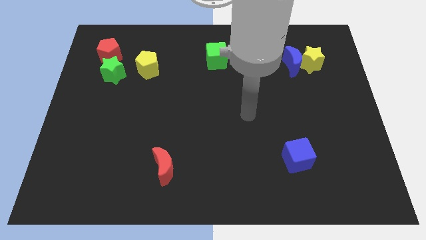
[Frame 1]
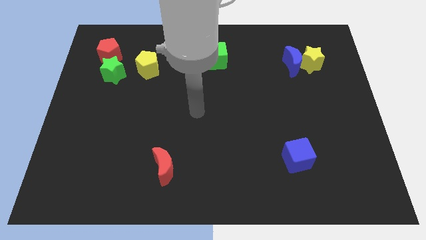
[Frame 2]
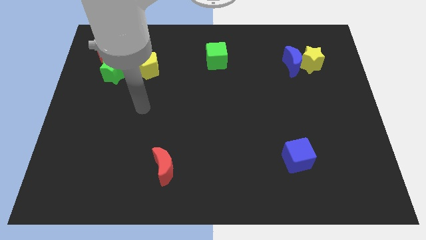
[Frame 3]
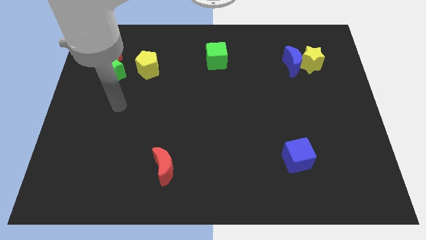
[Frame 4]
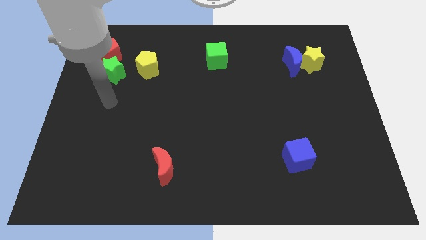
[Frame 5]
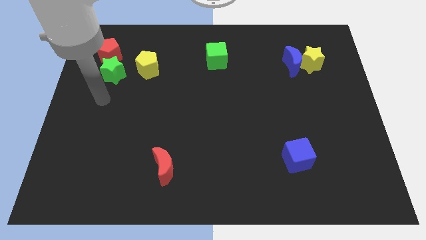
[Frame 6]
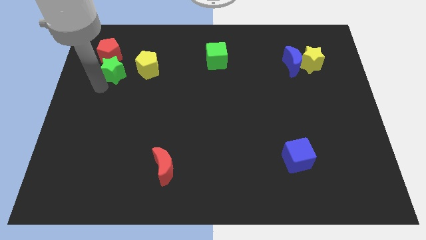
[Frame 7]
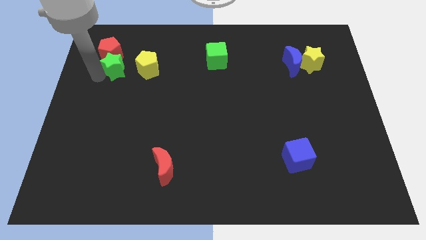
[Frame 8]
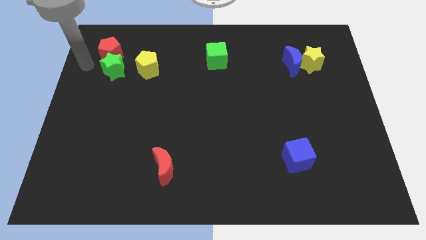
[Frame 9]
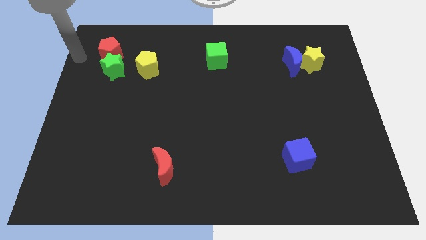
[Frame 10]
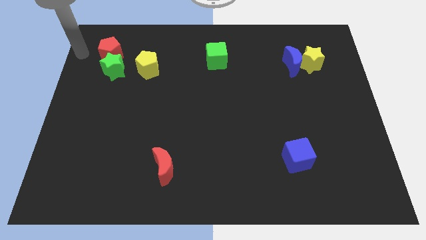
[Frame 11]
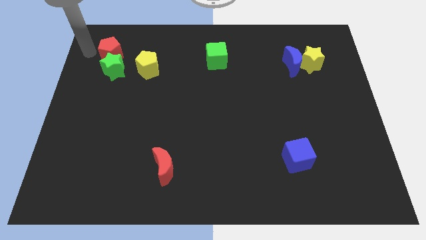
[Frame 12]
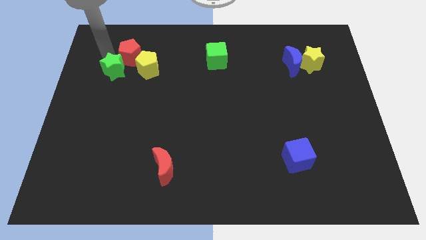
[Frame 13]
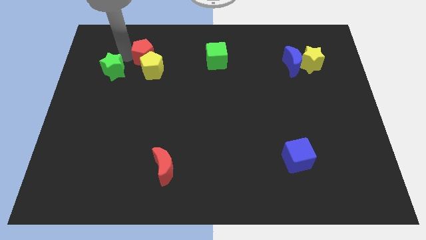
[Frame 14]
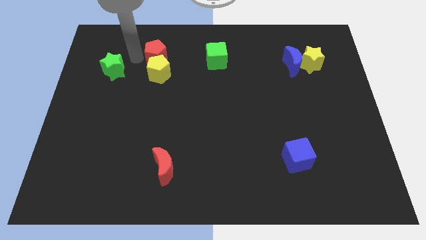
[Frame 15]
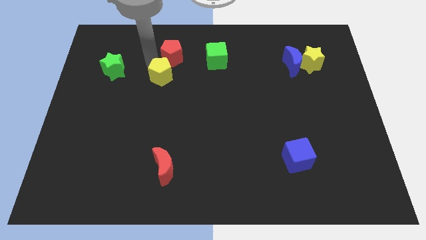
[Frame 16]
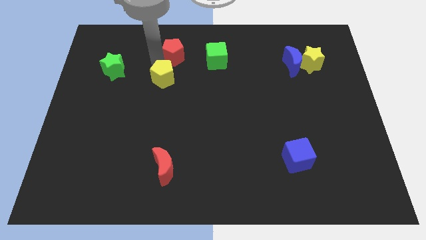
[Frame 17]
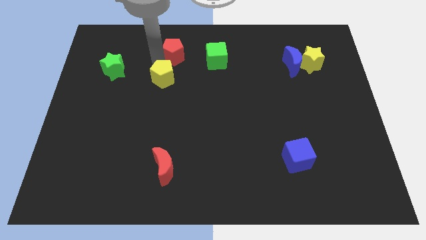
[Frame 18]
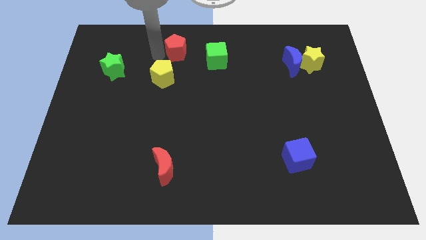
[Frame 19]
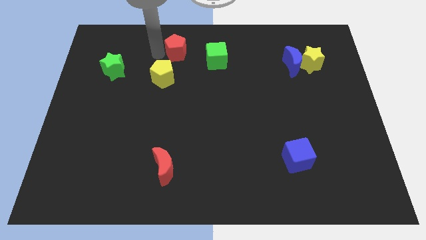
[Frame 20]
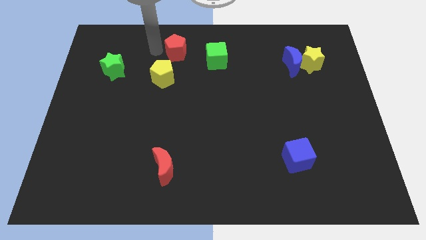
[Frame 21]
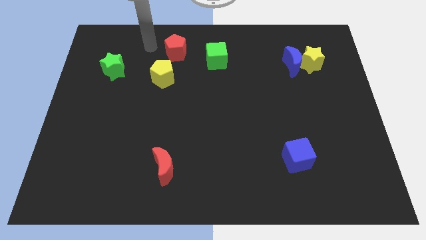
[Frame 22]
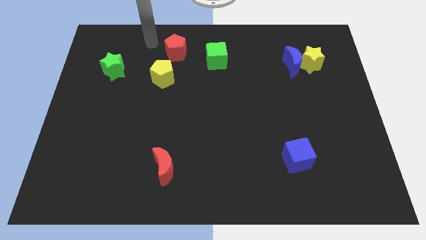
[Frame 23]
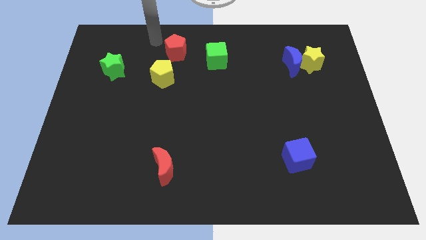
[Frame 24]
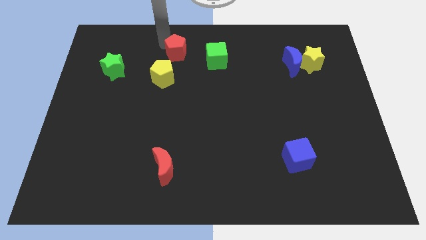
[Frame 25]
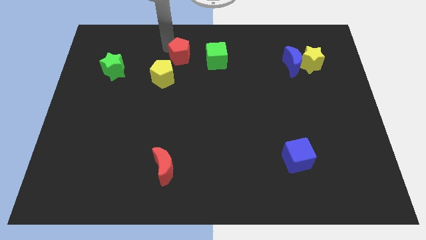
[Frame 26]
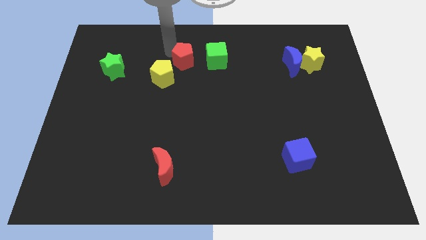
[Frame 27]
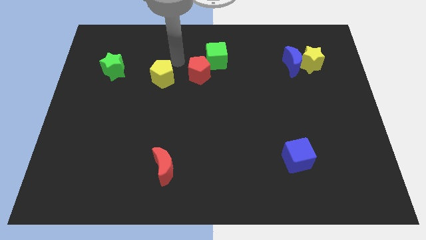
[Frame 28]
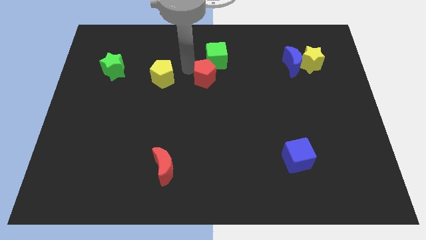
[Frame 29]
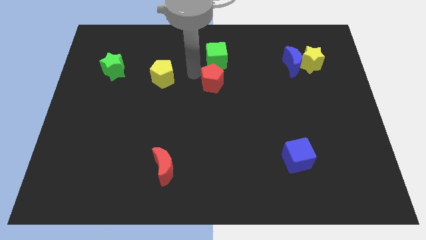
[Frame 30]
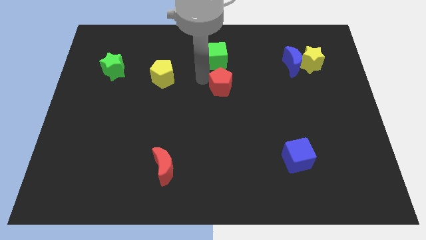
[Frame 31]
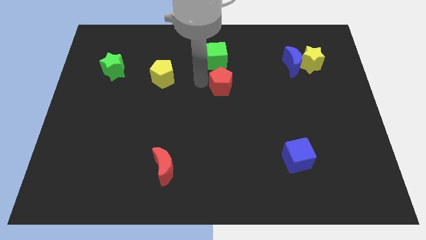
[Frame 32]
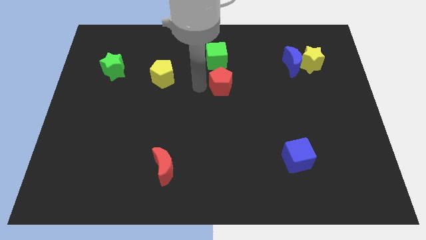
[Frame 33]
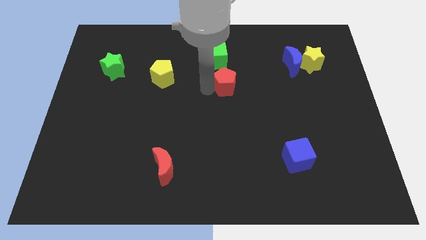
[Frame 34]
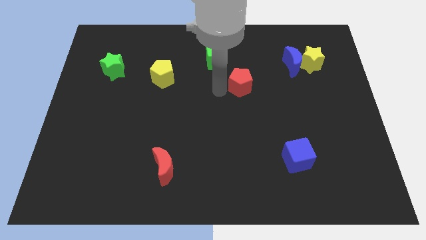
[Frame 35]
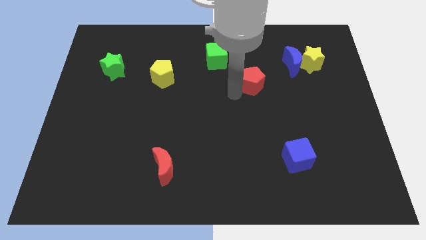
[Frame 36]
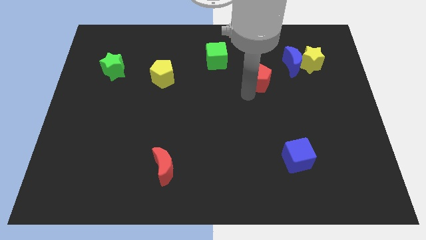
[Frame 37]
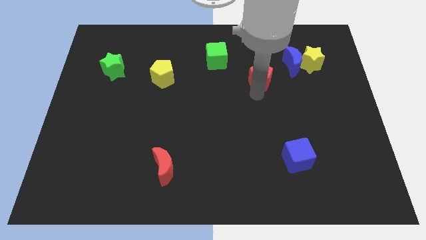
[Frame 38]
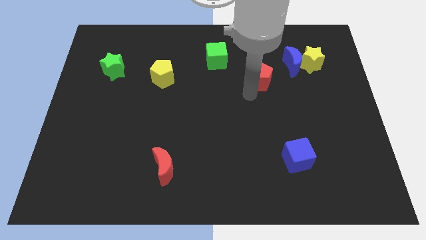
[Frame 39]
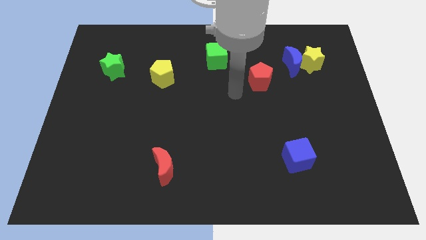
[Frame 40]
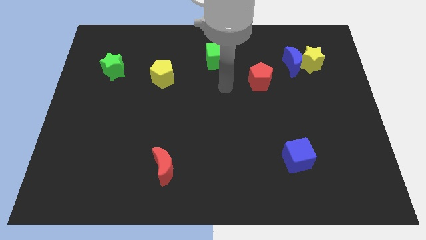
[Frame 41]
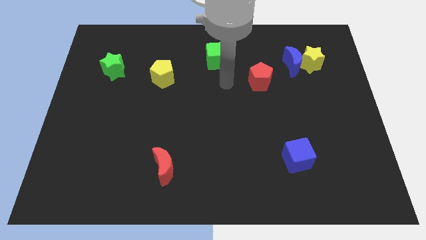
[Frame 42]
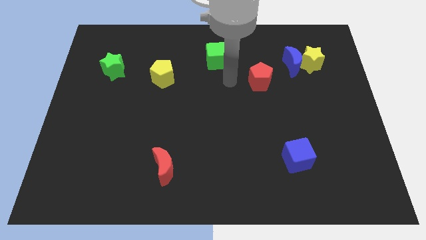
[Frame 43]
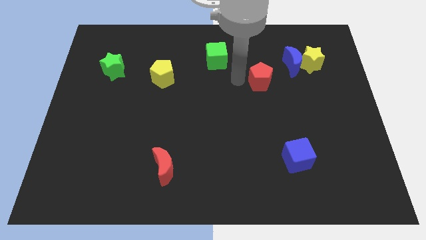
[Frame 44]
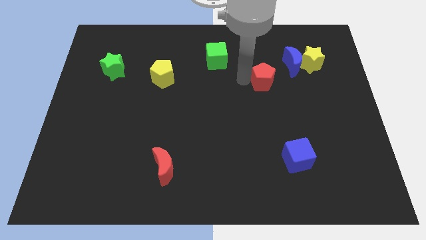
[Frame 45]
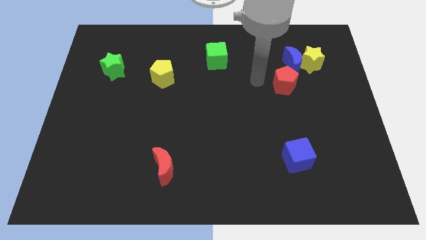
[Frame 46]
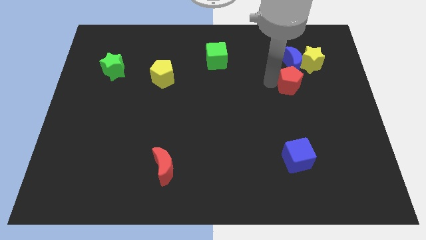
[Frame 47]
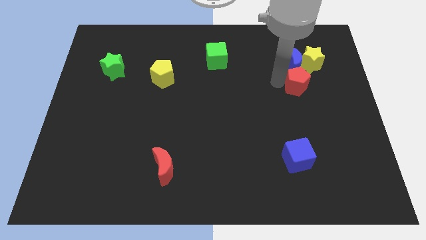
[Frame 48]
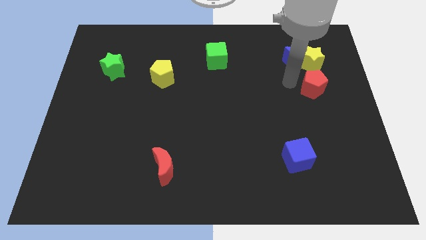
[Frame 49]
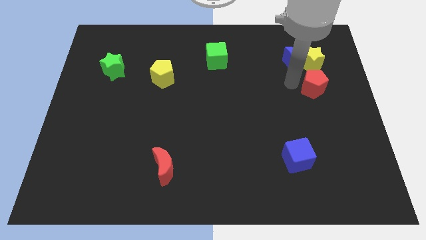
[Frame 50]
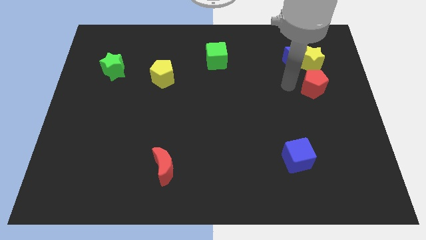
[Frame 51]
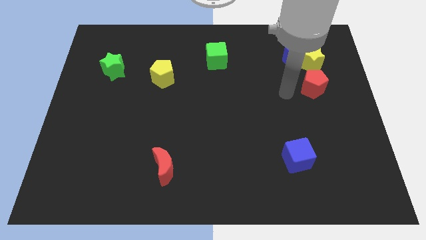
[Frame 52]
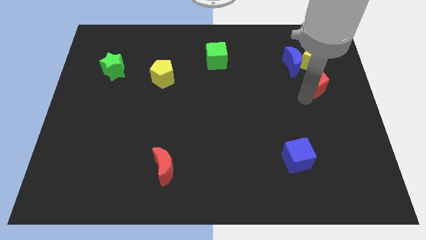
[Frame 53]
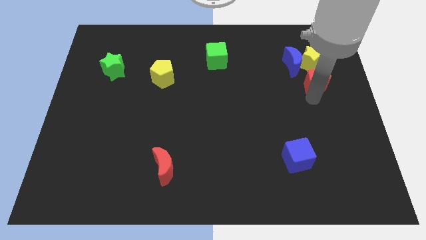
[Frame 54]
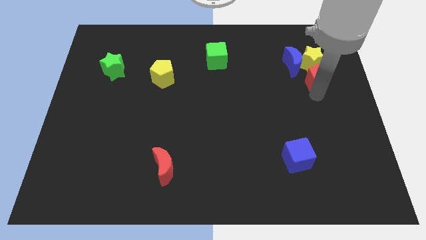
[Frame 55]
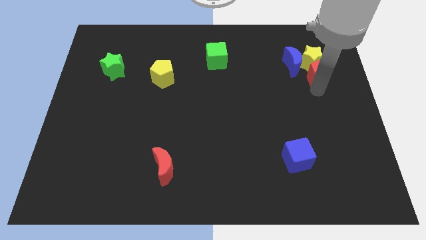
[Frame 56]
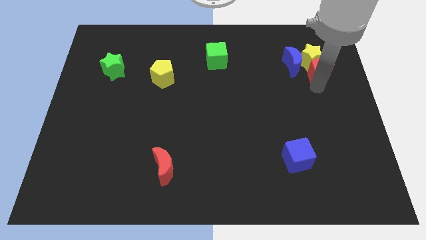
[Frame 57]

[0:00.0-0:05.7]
move the red pentagon towards the yellow star

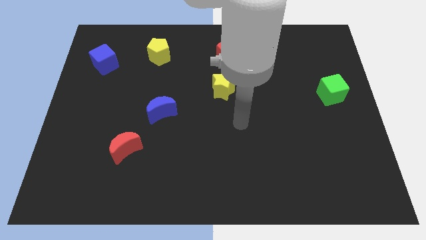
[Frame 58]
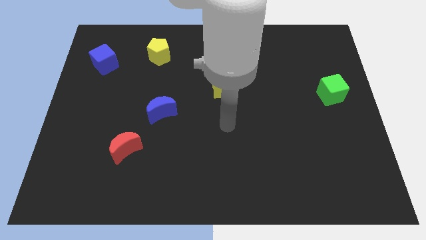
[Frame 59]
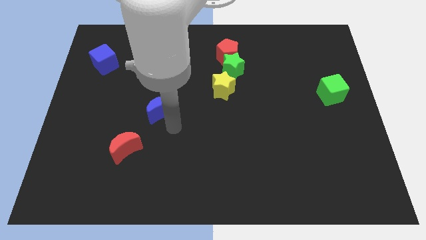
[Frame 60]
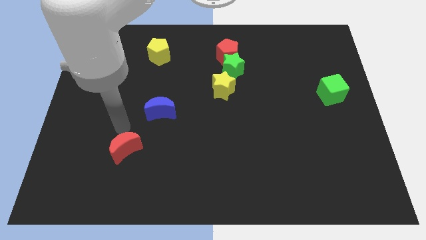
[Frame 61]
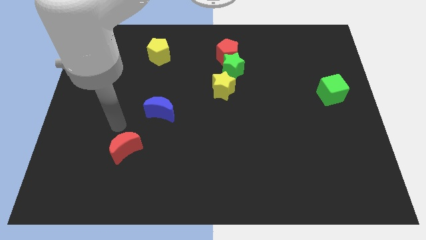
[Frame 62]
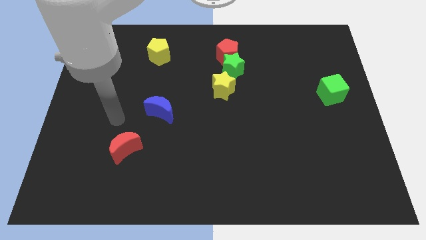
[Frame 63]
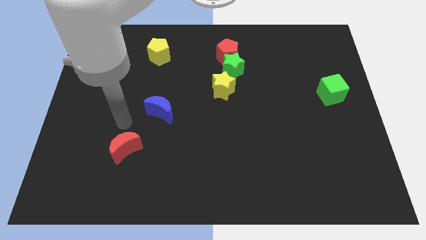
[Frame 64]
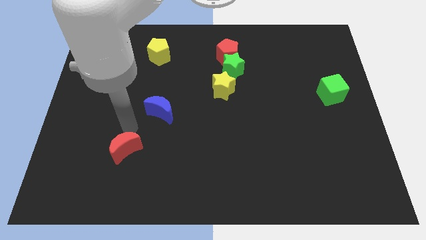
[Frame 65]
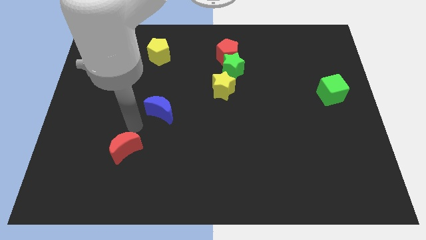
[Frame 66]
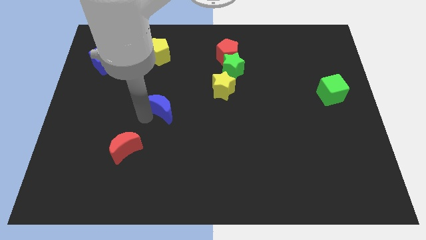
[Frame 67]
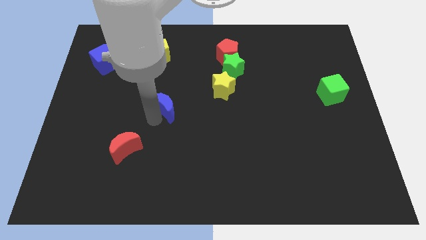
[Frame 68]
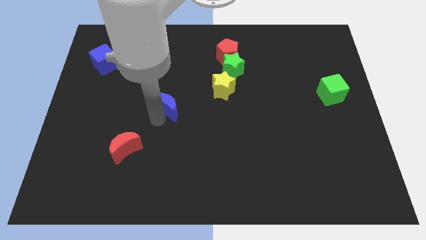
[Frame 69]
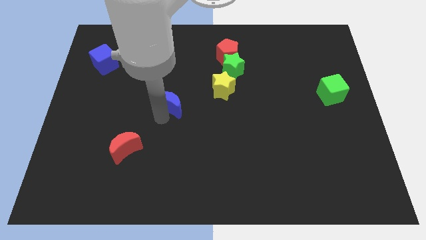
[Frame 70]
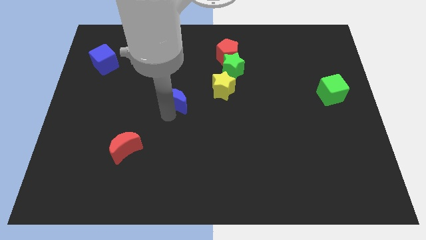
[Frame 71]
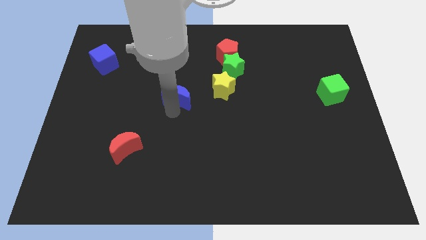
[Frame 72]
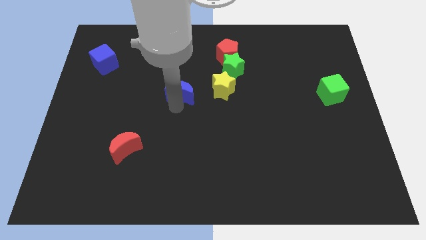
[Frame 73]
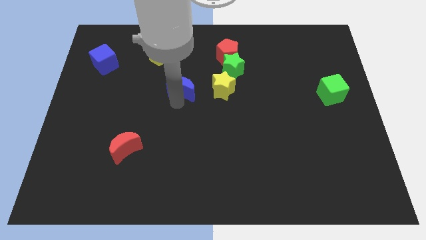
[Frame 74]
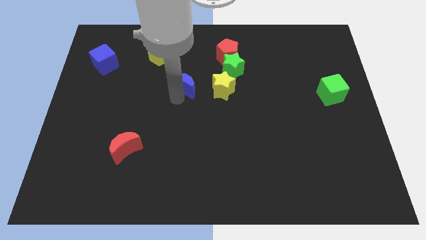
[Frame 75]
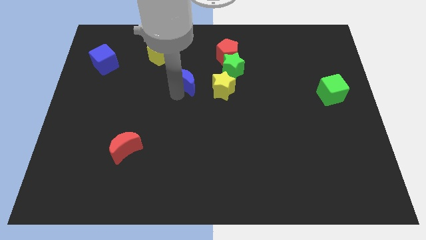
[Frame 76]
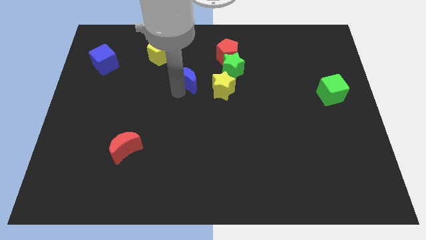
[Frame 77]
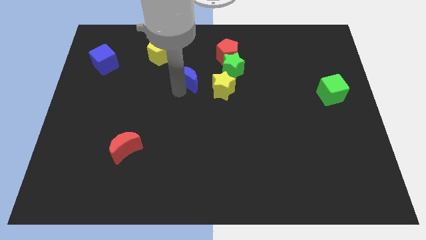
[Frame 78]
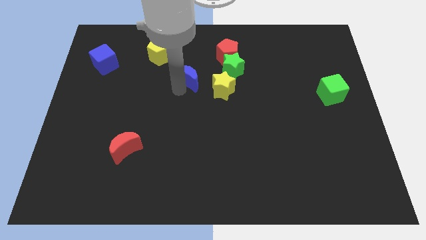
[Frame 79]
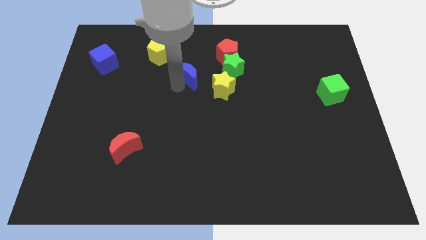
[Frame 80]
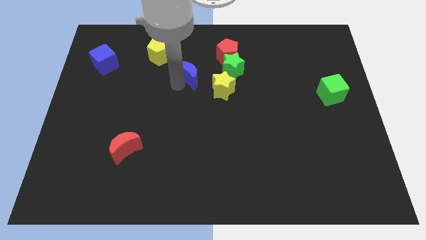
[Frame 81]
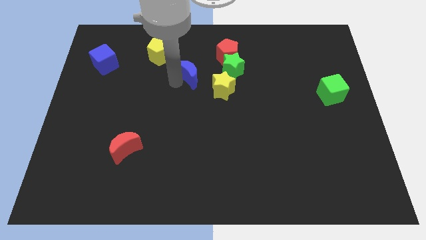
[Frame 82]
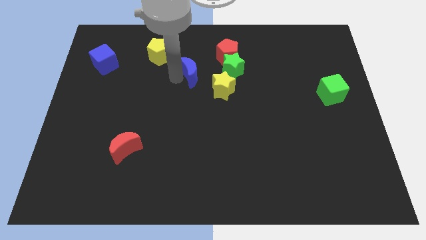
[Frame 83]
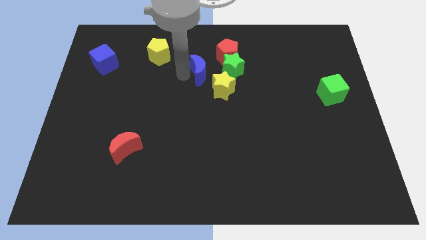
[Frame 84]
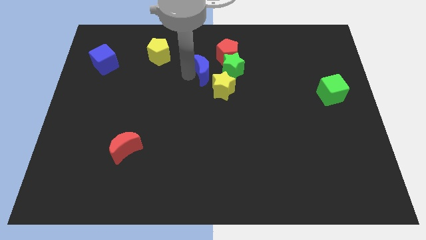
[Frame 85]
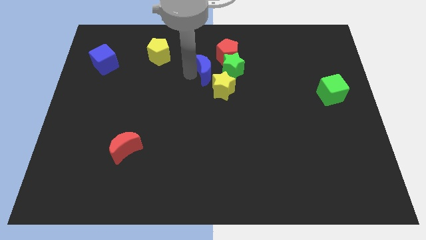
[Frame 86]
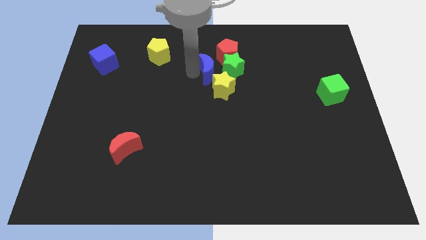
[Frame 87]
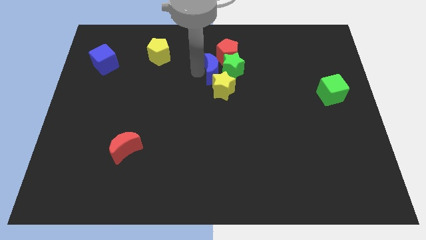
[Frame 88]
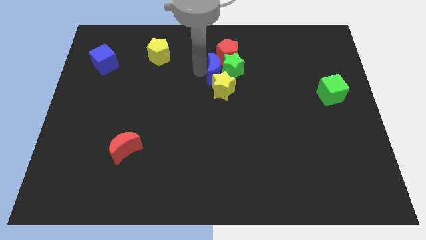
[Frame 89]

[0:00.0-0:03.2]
move the blue moon close to the green star
